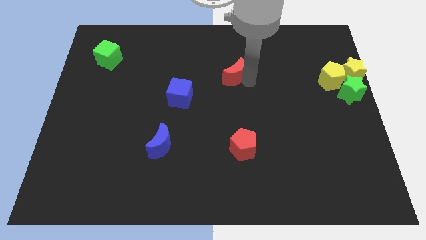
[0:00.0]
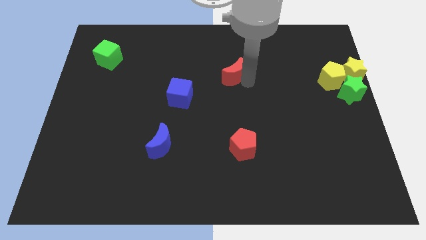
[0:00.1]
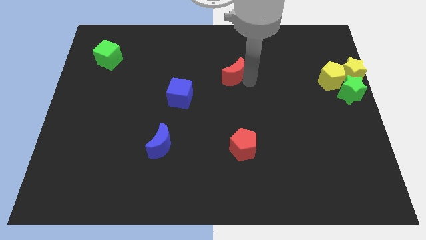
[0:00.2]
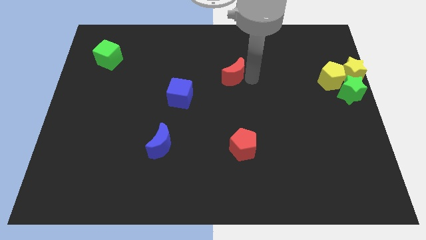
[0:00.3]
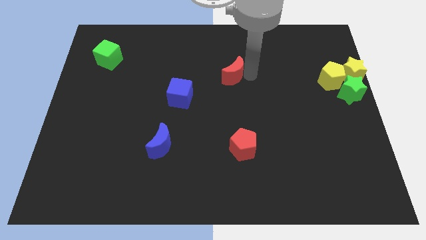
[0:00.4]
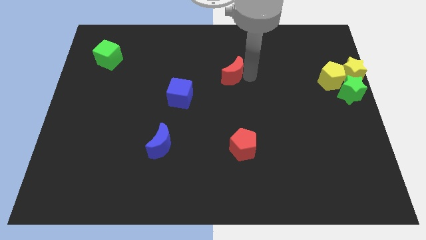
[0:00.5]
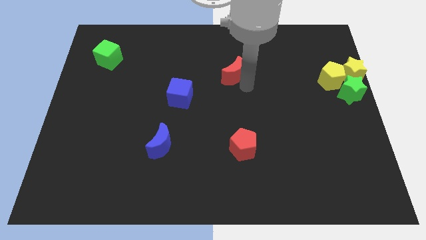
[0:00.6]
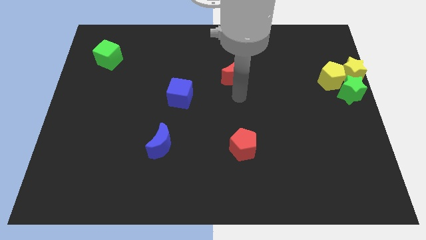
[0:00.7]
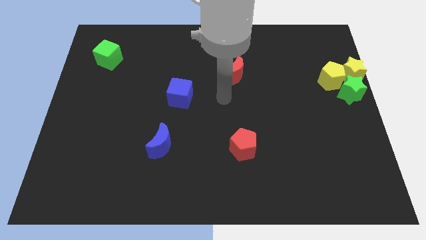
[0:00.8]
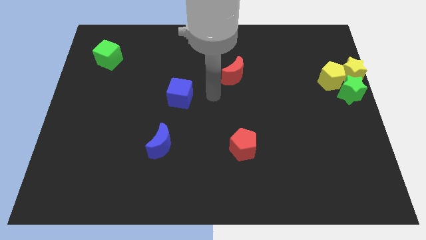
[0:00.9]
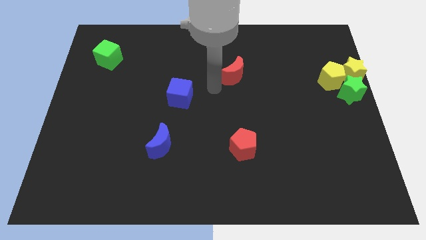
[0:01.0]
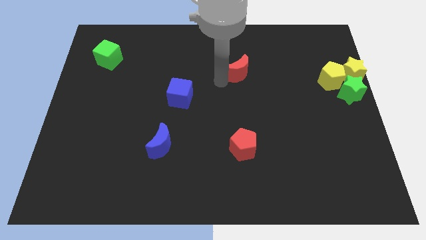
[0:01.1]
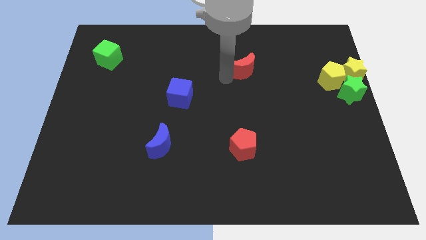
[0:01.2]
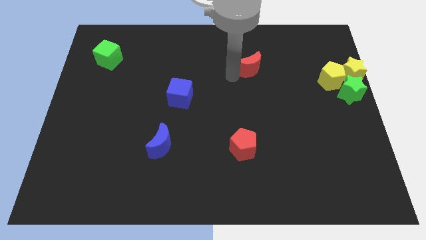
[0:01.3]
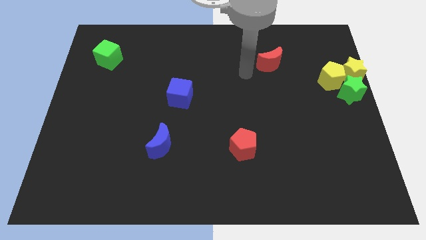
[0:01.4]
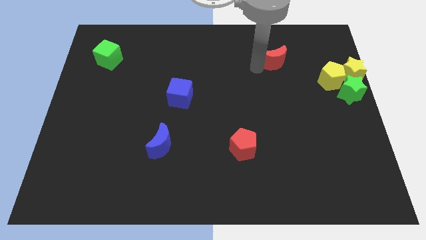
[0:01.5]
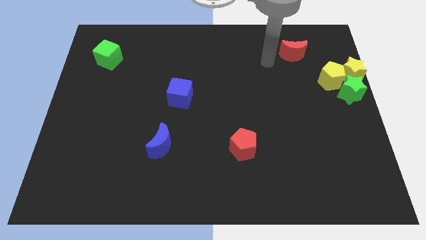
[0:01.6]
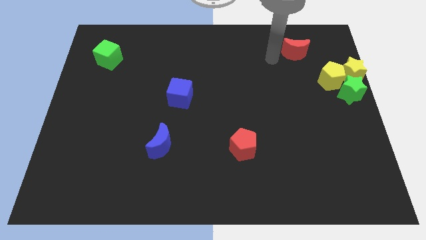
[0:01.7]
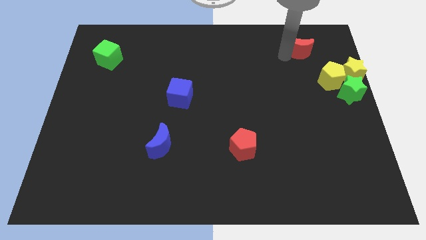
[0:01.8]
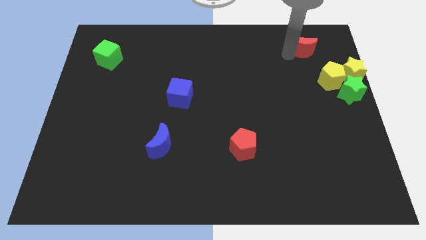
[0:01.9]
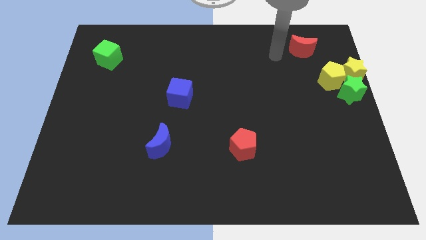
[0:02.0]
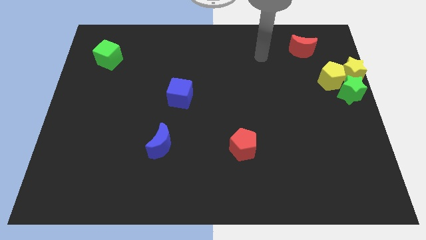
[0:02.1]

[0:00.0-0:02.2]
move red moon to the top left of yelllow pentagon

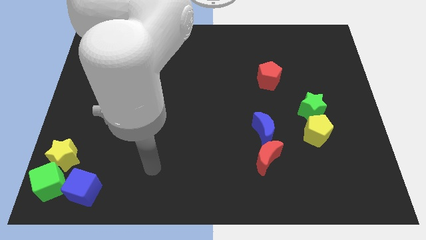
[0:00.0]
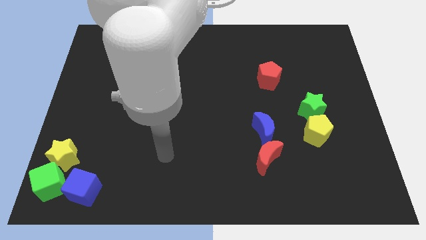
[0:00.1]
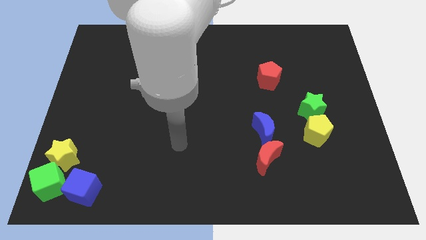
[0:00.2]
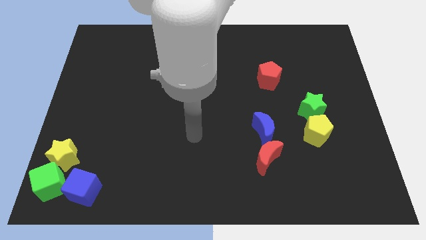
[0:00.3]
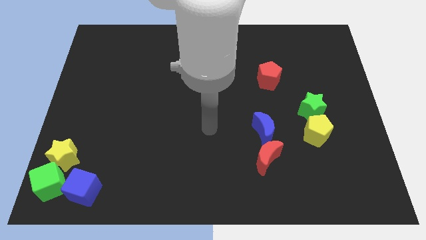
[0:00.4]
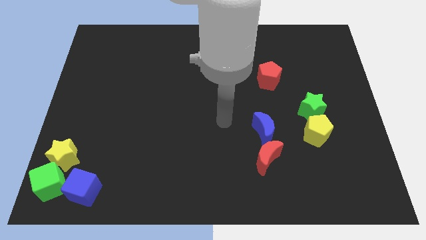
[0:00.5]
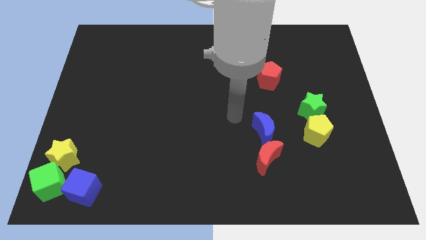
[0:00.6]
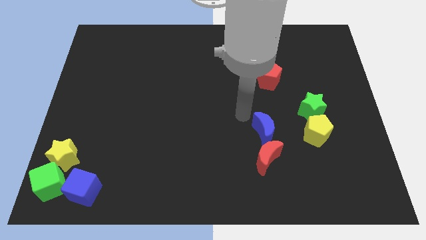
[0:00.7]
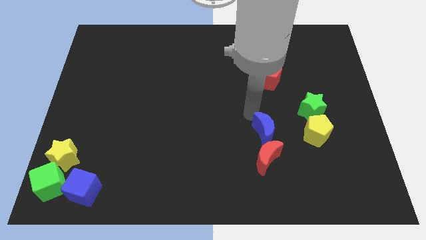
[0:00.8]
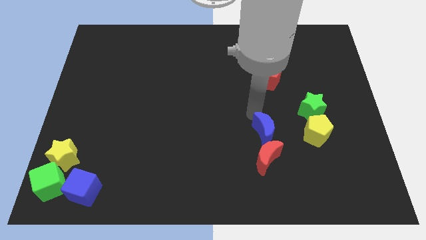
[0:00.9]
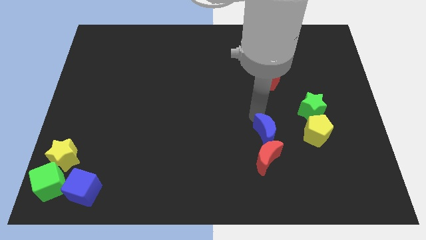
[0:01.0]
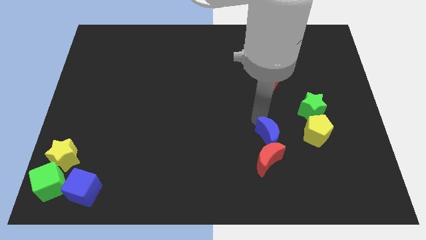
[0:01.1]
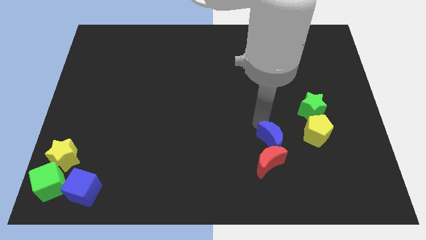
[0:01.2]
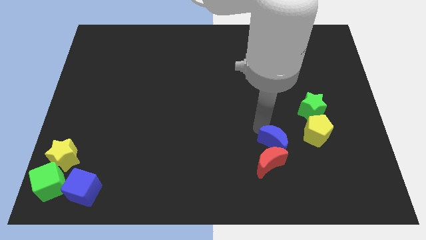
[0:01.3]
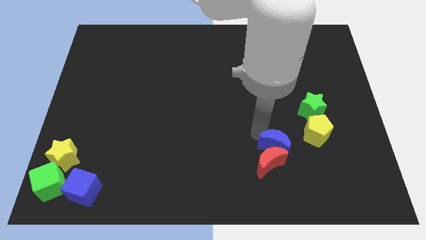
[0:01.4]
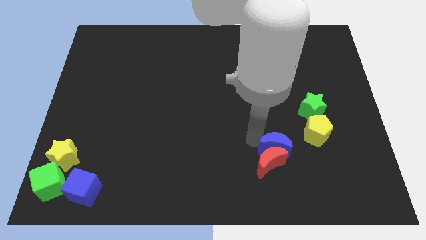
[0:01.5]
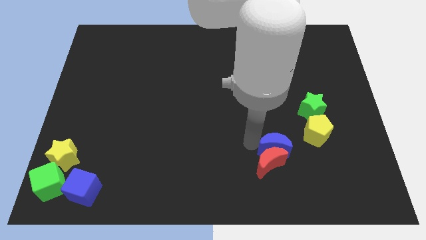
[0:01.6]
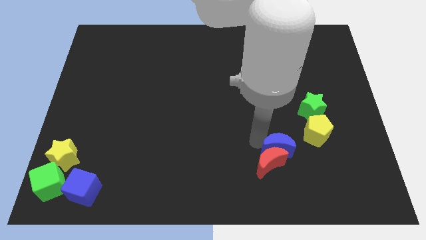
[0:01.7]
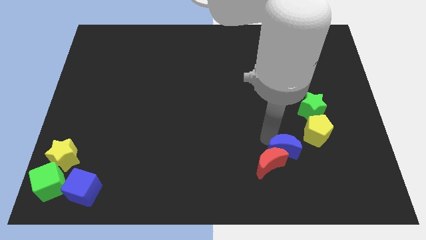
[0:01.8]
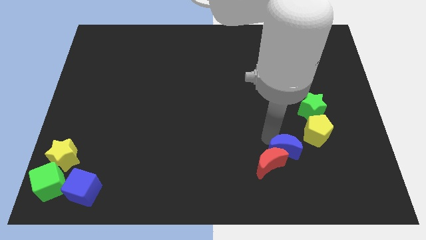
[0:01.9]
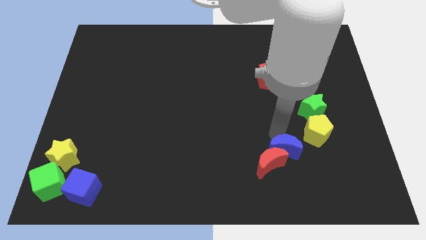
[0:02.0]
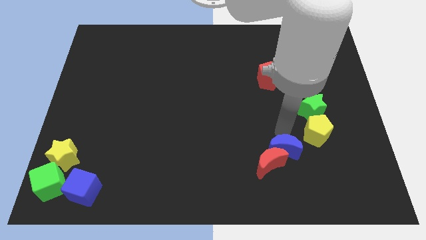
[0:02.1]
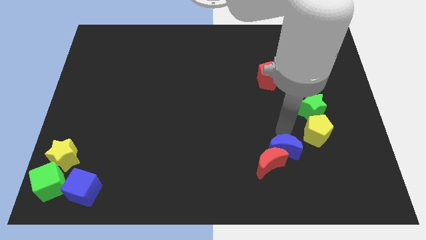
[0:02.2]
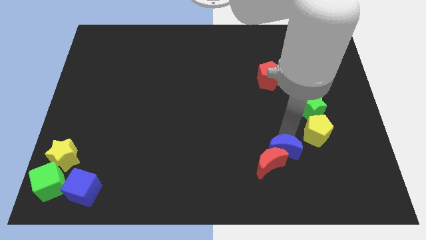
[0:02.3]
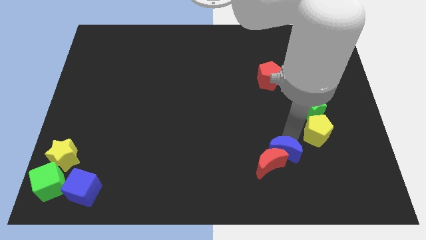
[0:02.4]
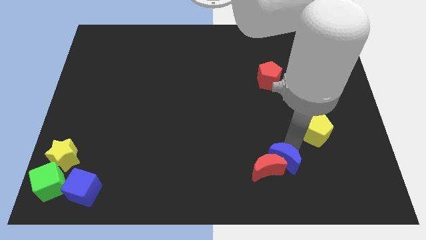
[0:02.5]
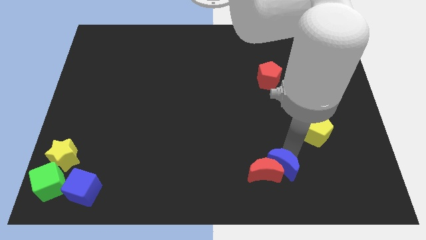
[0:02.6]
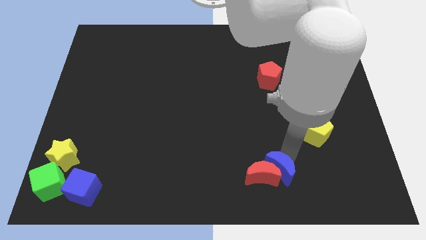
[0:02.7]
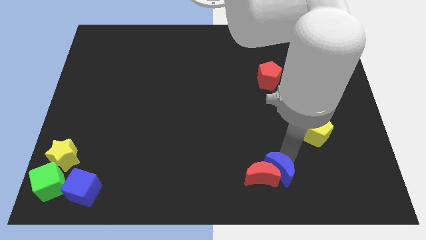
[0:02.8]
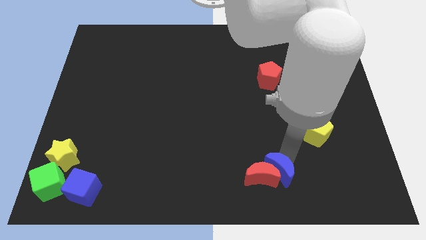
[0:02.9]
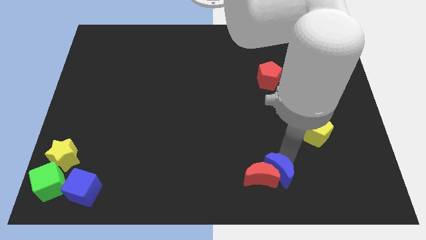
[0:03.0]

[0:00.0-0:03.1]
place blue moon to the top of the red moon

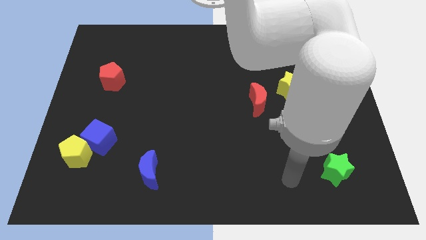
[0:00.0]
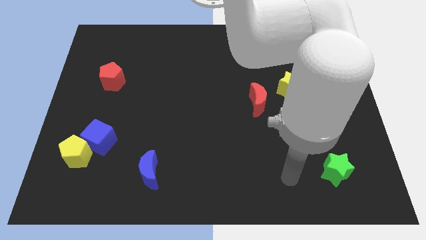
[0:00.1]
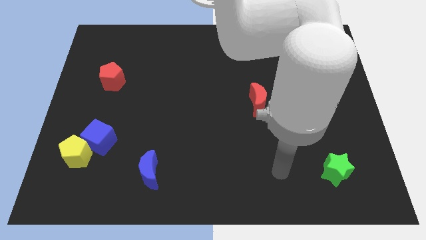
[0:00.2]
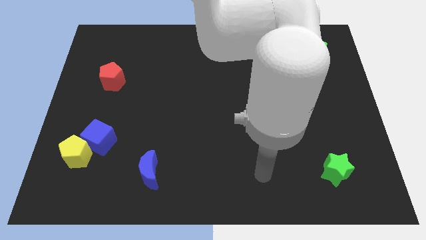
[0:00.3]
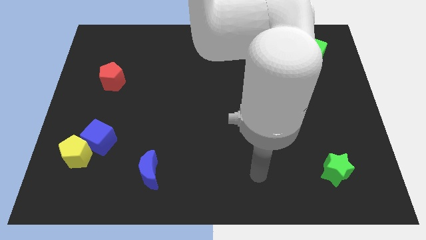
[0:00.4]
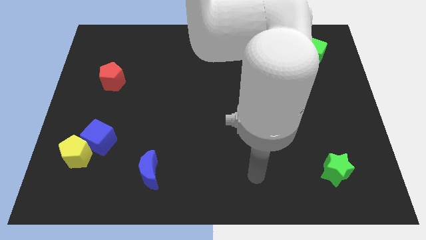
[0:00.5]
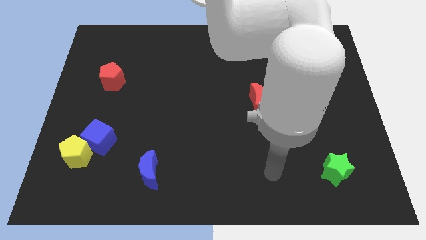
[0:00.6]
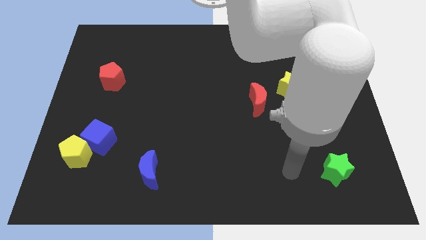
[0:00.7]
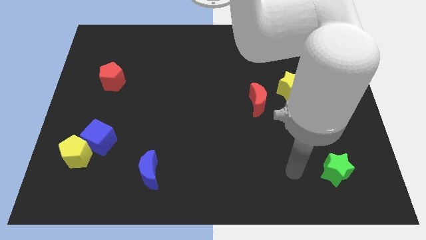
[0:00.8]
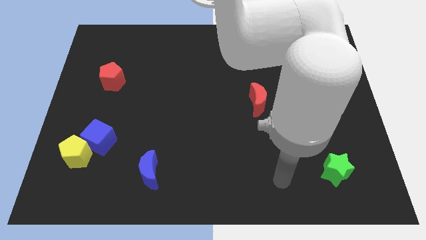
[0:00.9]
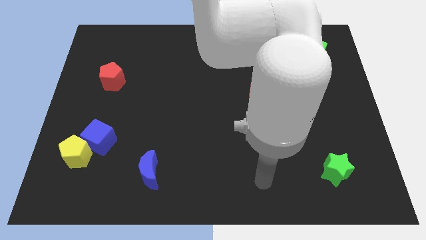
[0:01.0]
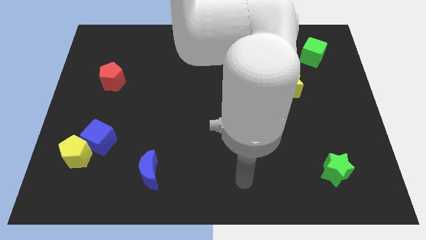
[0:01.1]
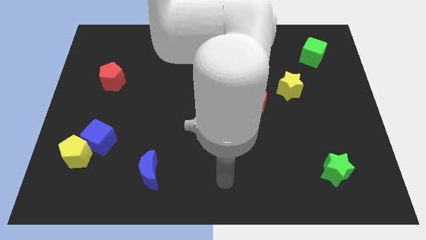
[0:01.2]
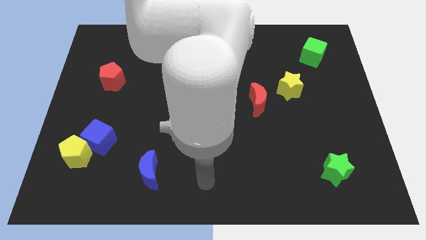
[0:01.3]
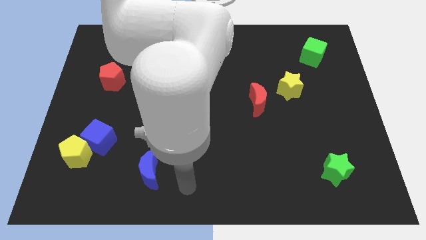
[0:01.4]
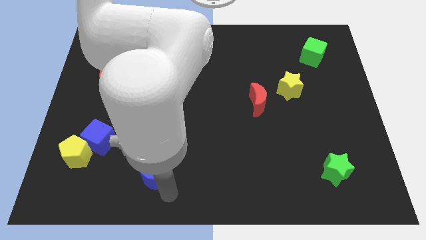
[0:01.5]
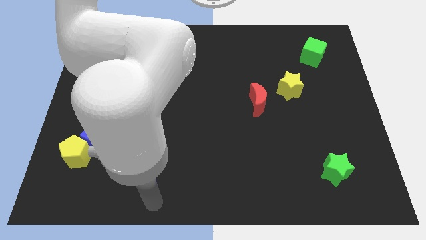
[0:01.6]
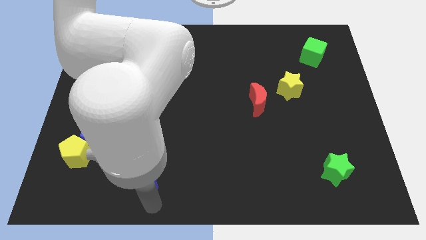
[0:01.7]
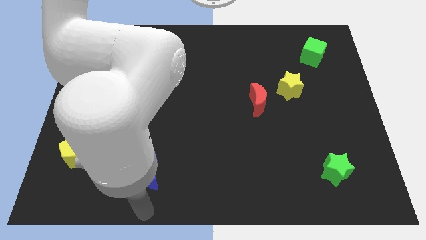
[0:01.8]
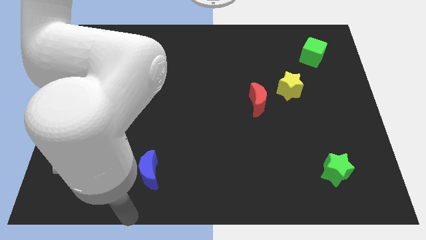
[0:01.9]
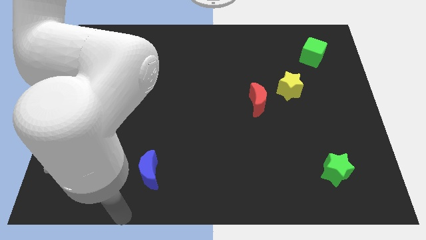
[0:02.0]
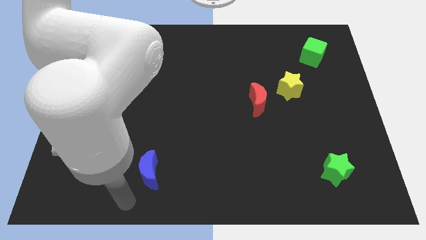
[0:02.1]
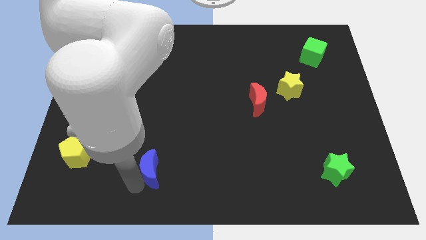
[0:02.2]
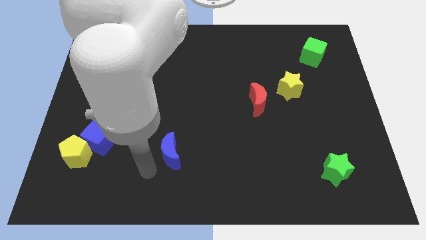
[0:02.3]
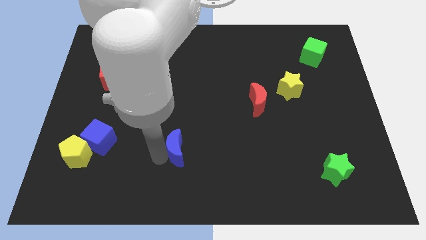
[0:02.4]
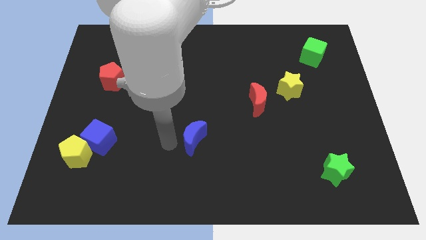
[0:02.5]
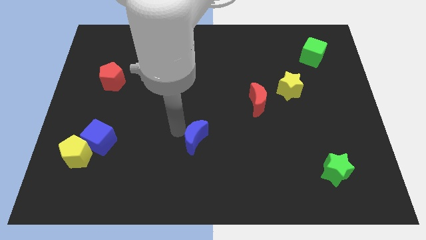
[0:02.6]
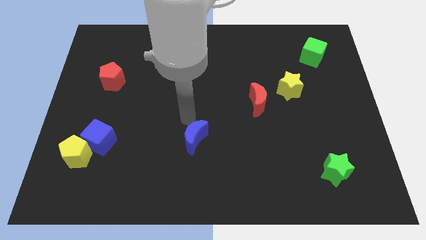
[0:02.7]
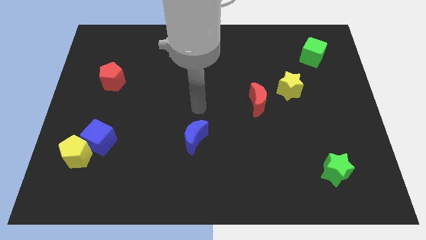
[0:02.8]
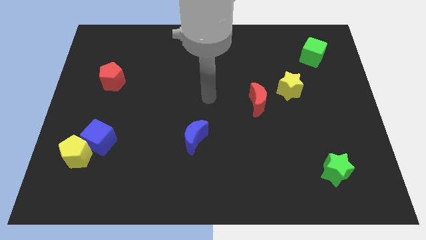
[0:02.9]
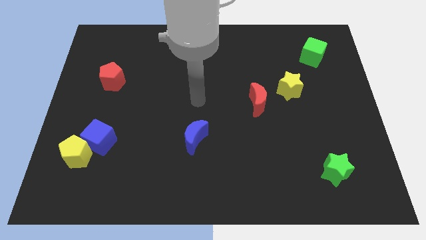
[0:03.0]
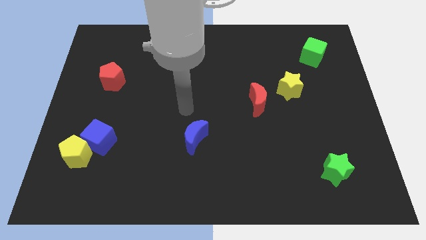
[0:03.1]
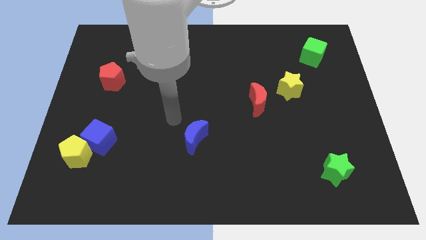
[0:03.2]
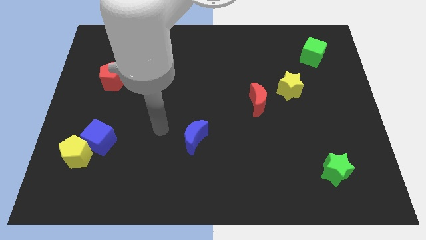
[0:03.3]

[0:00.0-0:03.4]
push the blue crescent towards the center of the board

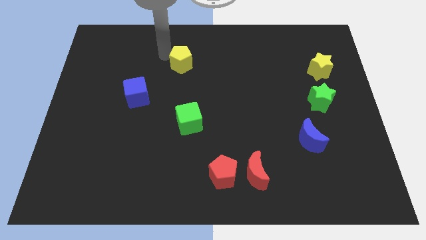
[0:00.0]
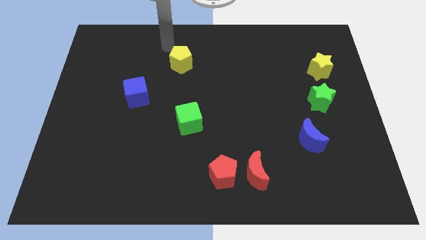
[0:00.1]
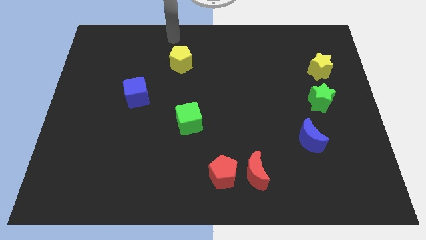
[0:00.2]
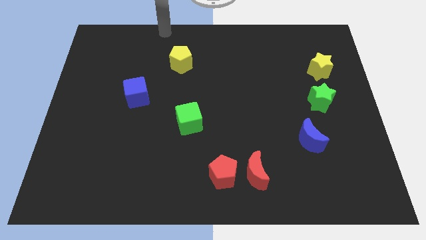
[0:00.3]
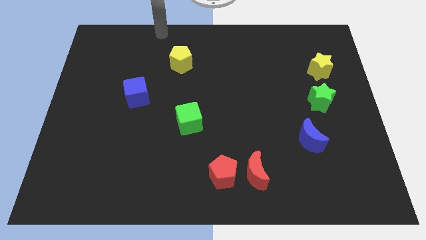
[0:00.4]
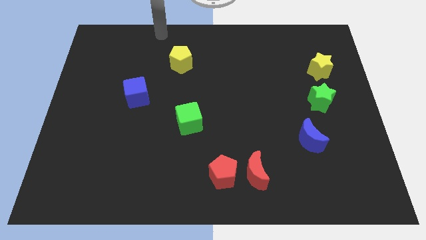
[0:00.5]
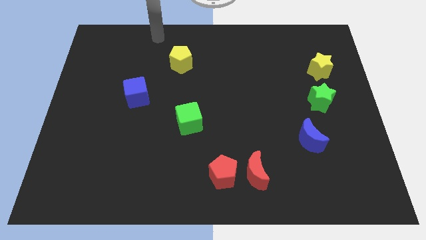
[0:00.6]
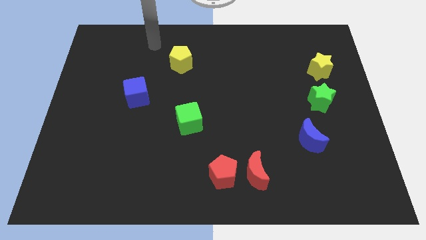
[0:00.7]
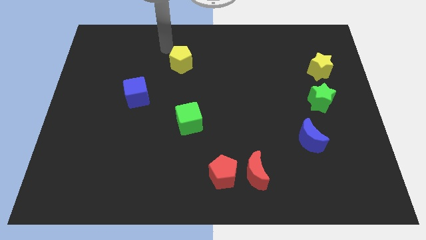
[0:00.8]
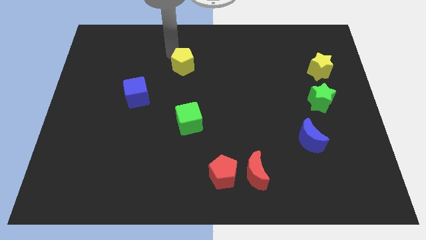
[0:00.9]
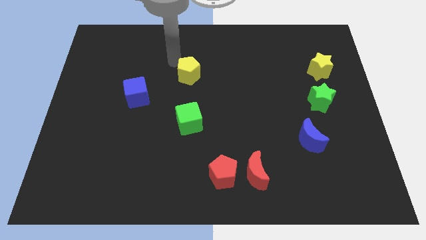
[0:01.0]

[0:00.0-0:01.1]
push yellow pentagon slightly down vertical to green cube
